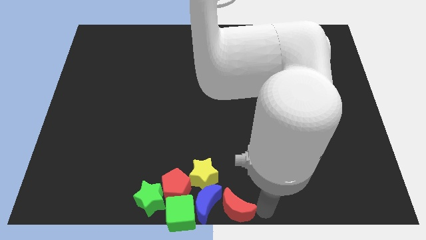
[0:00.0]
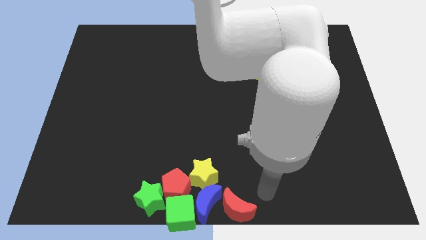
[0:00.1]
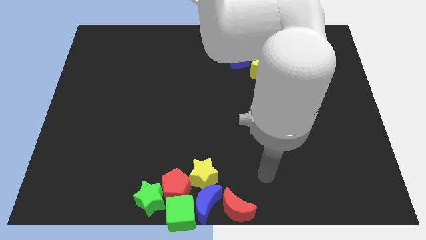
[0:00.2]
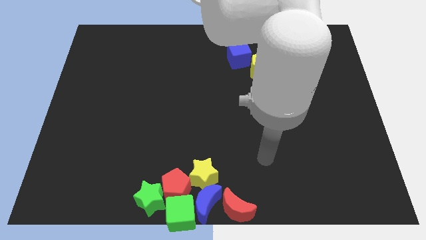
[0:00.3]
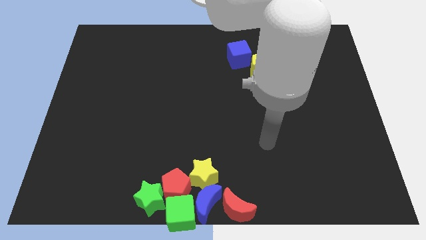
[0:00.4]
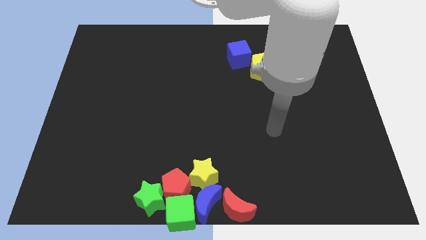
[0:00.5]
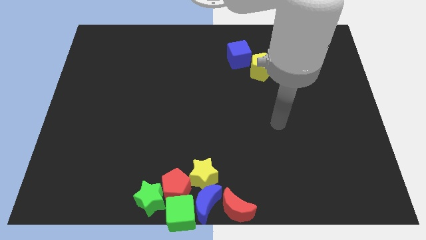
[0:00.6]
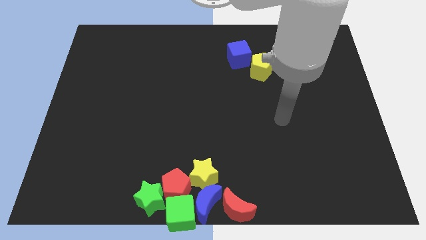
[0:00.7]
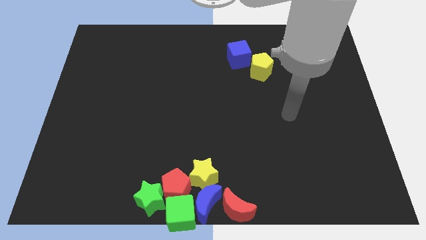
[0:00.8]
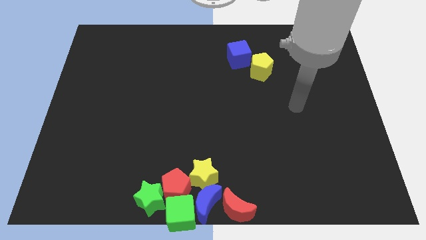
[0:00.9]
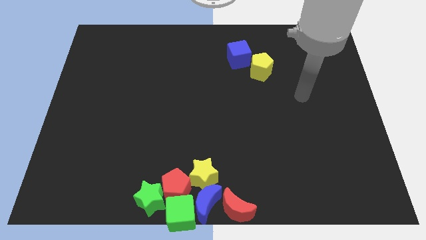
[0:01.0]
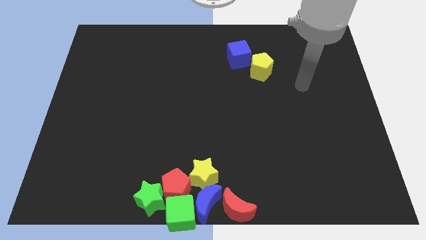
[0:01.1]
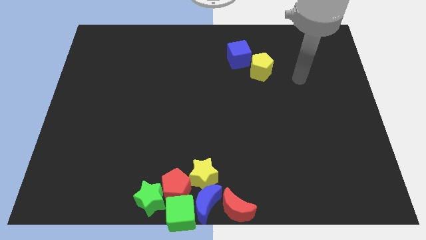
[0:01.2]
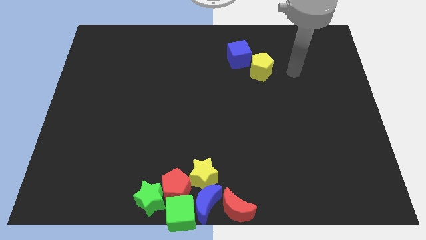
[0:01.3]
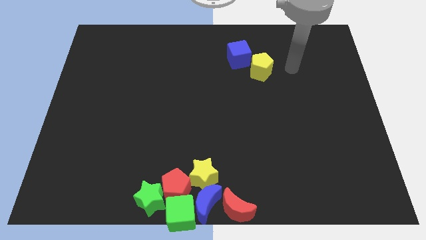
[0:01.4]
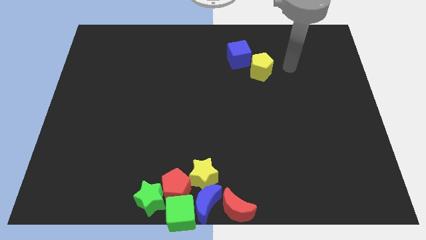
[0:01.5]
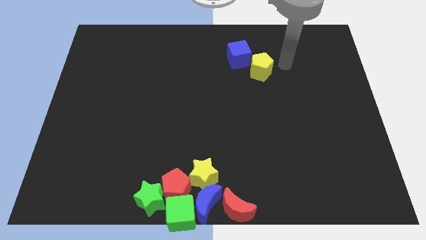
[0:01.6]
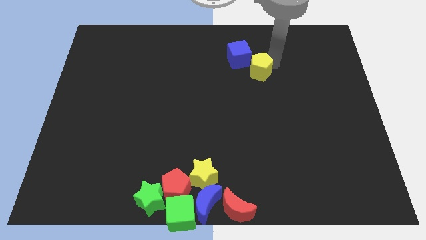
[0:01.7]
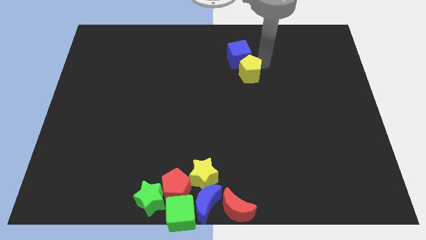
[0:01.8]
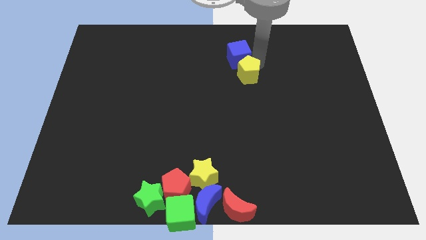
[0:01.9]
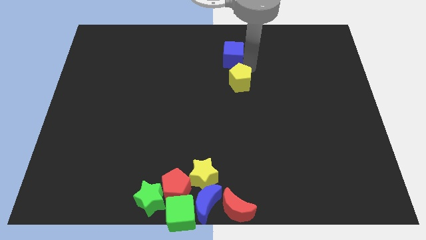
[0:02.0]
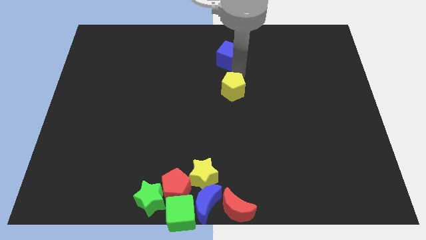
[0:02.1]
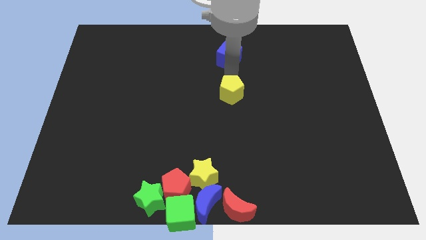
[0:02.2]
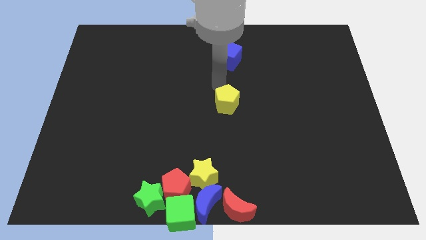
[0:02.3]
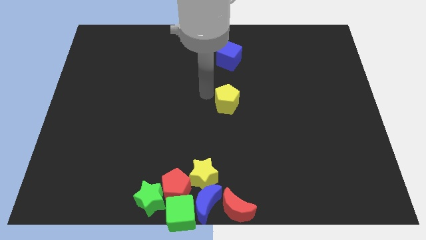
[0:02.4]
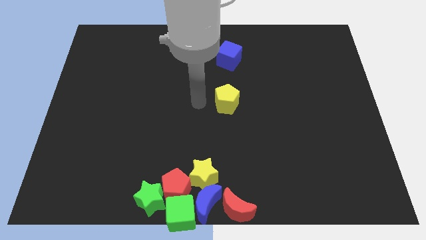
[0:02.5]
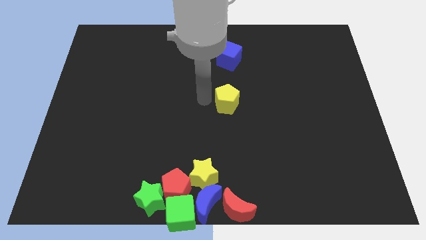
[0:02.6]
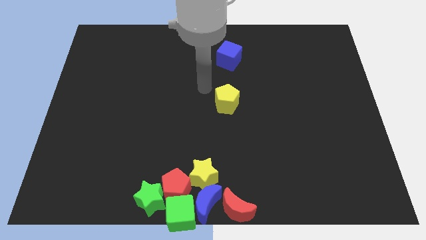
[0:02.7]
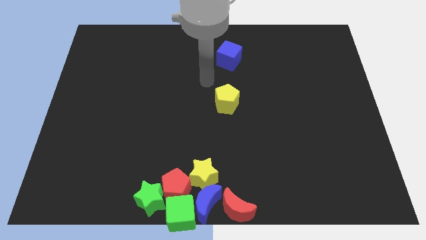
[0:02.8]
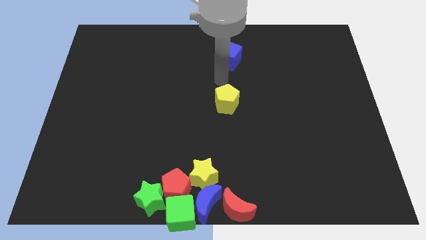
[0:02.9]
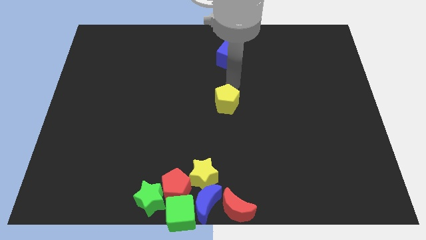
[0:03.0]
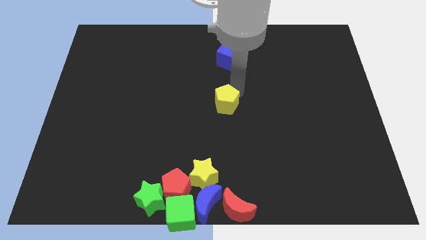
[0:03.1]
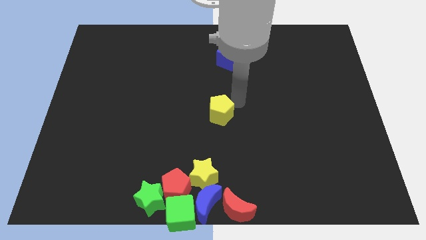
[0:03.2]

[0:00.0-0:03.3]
move the arm away from the red moon

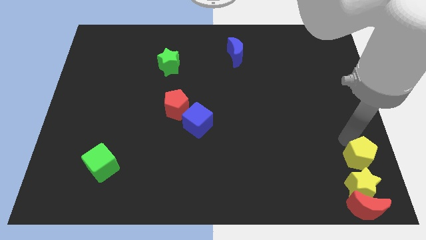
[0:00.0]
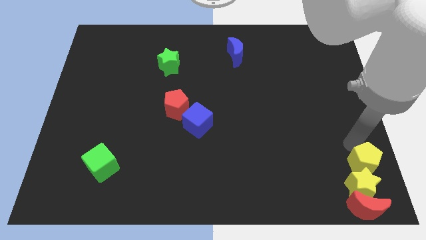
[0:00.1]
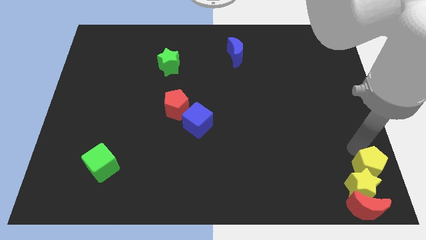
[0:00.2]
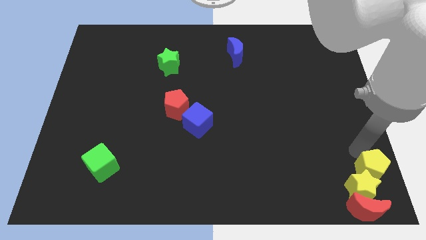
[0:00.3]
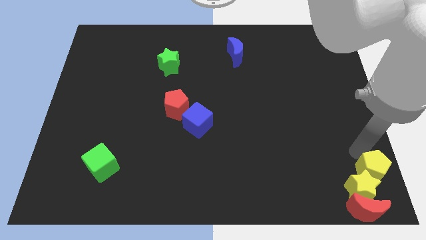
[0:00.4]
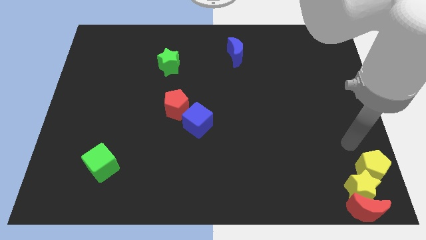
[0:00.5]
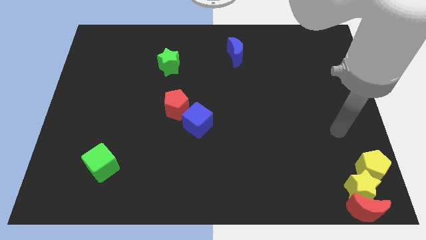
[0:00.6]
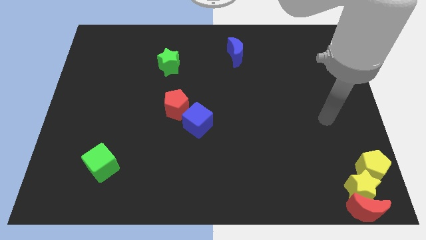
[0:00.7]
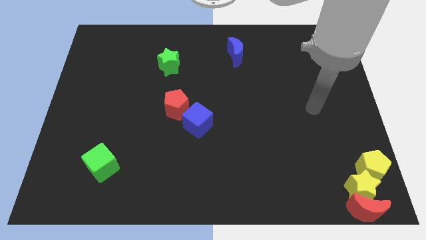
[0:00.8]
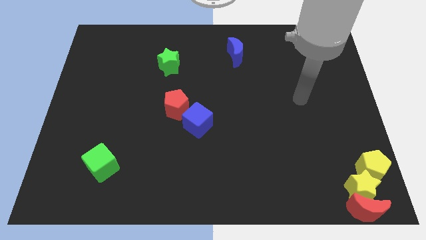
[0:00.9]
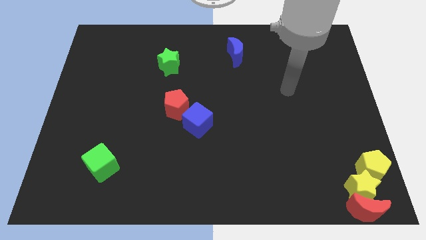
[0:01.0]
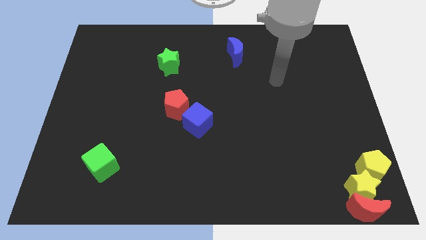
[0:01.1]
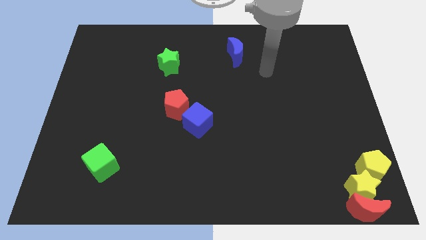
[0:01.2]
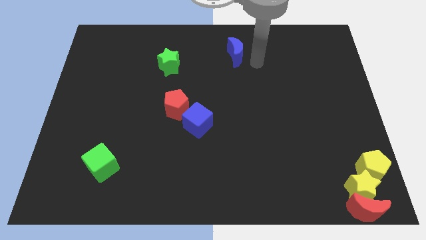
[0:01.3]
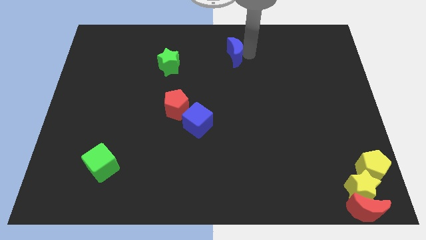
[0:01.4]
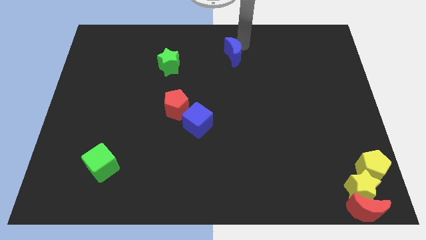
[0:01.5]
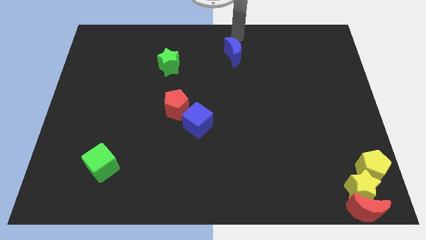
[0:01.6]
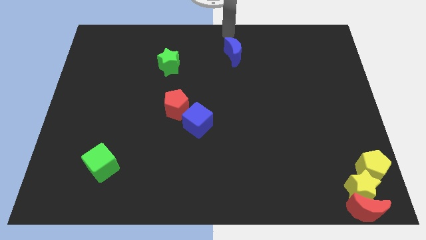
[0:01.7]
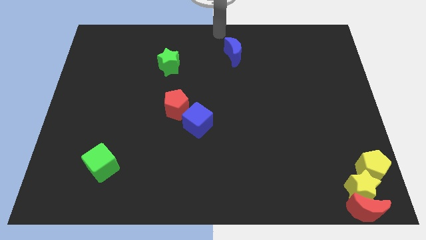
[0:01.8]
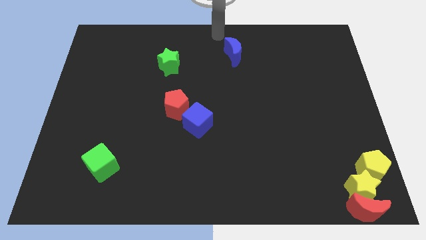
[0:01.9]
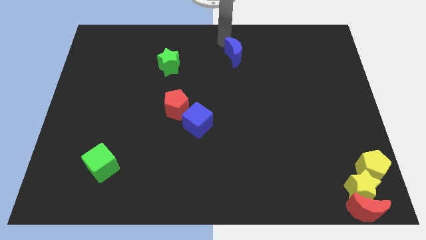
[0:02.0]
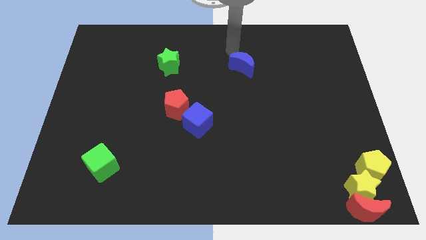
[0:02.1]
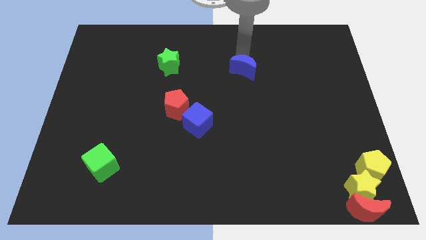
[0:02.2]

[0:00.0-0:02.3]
move your arm close to the blue moon

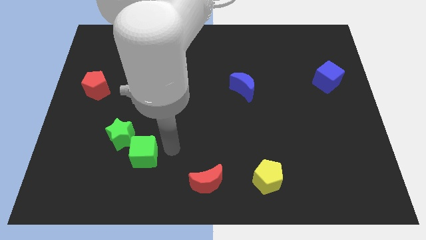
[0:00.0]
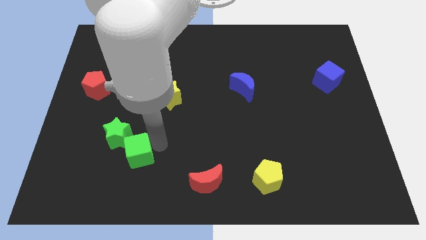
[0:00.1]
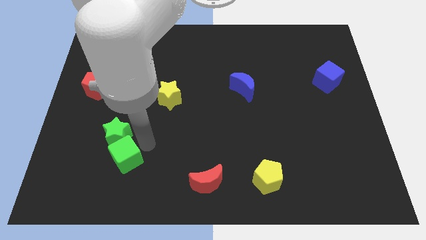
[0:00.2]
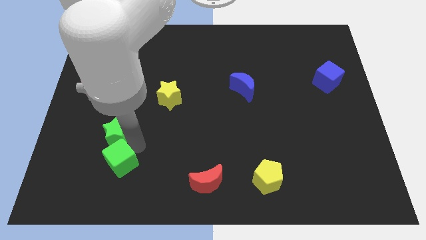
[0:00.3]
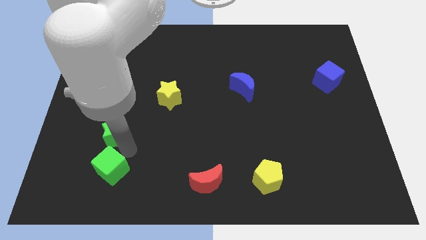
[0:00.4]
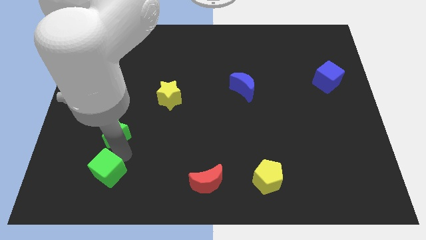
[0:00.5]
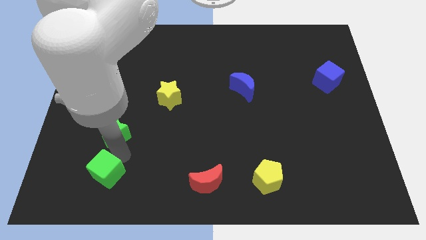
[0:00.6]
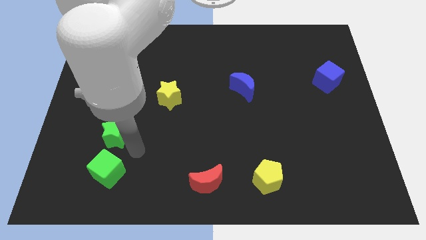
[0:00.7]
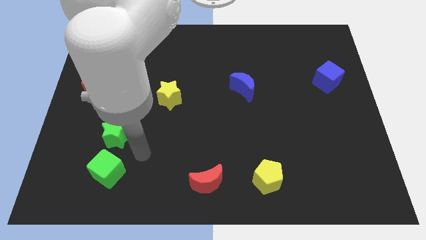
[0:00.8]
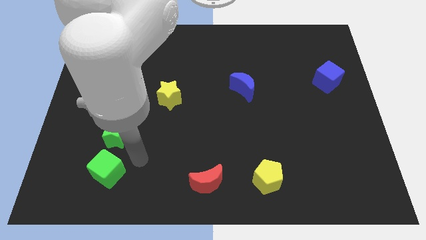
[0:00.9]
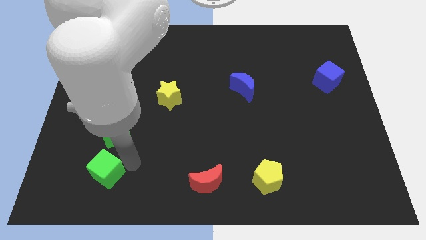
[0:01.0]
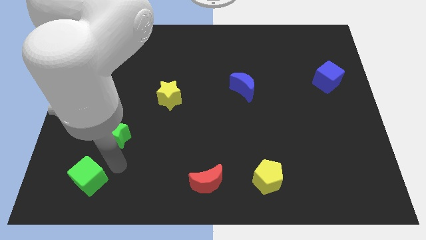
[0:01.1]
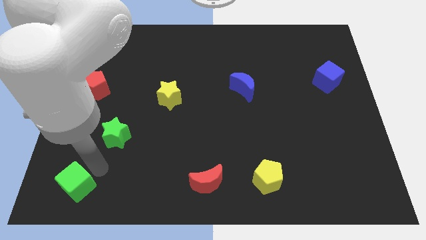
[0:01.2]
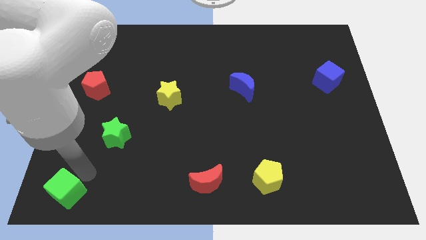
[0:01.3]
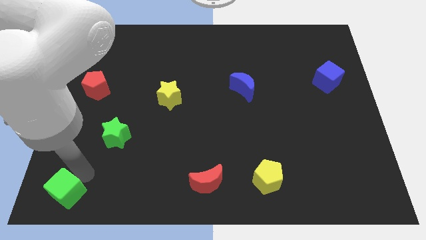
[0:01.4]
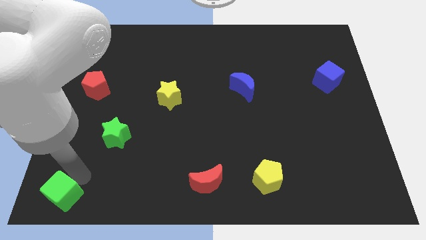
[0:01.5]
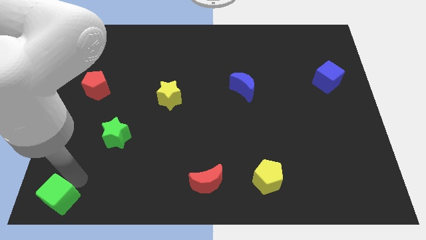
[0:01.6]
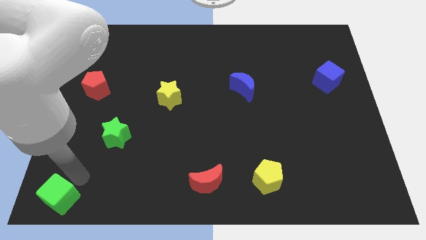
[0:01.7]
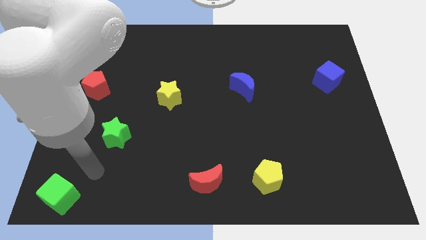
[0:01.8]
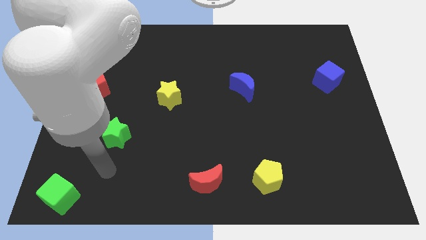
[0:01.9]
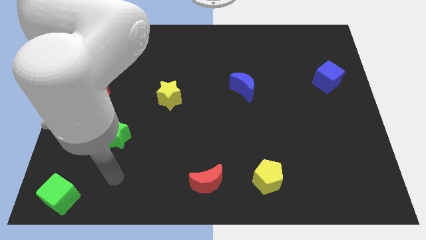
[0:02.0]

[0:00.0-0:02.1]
separate the green cube from the green star

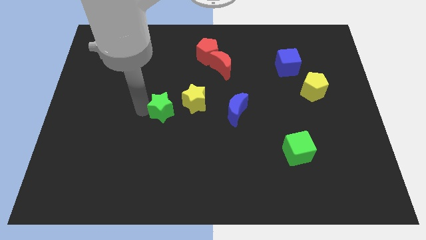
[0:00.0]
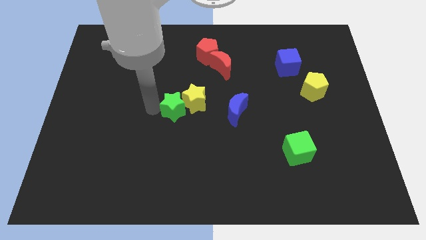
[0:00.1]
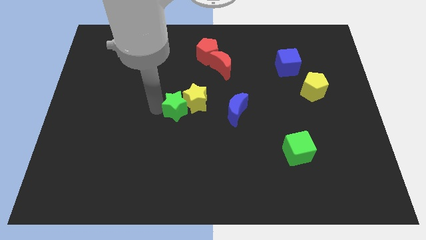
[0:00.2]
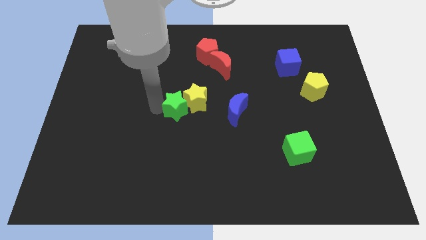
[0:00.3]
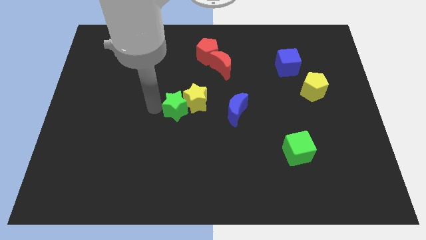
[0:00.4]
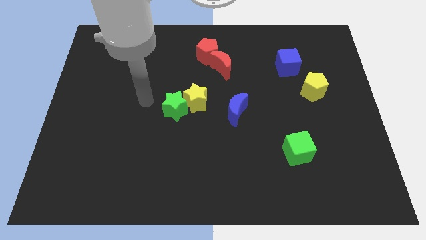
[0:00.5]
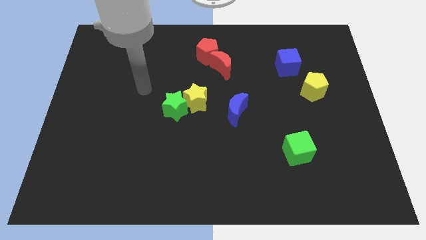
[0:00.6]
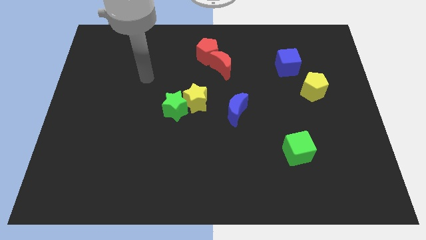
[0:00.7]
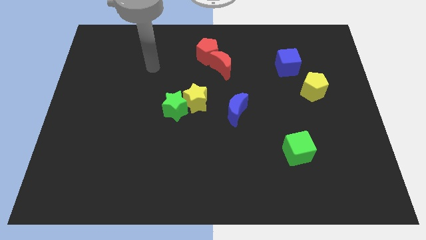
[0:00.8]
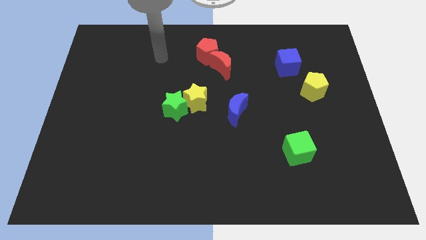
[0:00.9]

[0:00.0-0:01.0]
move the green star into the yellow star

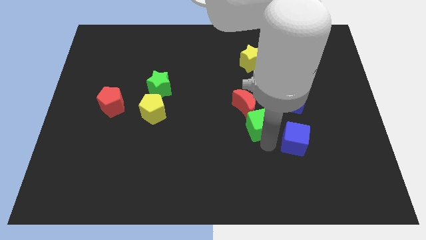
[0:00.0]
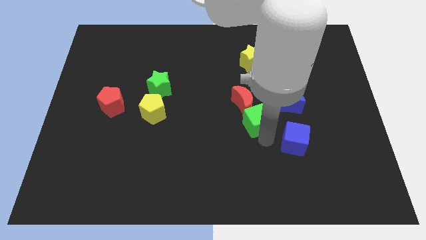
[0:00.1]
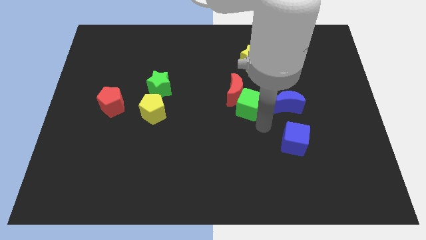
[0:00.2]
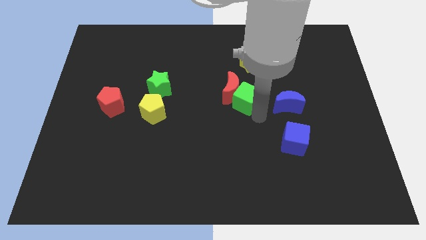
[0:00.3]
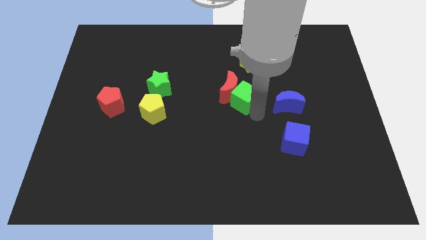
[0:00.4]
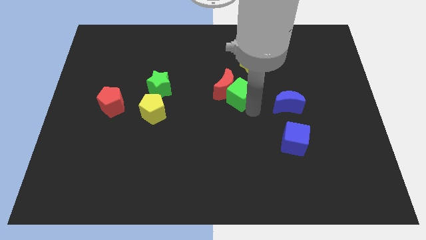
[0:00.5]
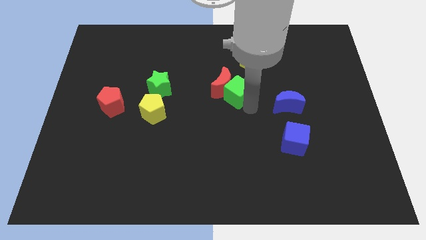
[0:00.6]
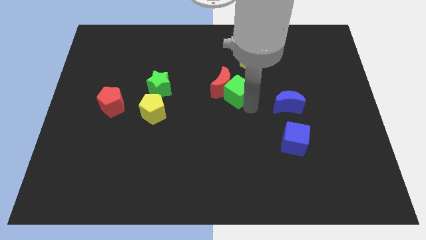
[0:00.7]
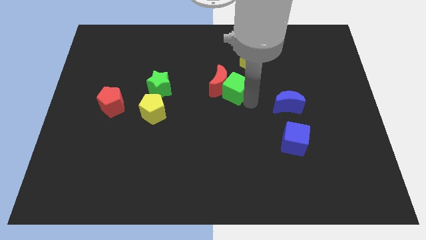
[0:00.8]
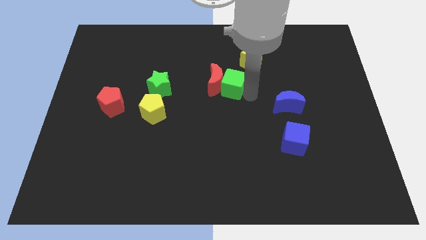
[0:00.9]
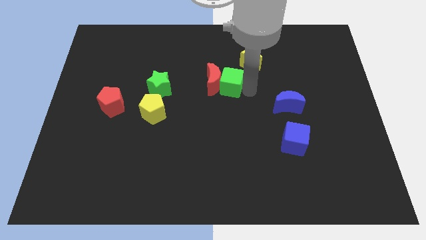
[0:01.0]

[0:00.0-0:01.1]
place the green cube at the right of the red crescent
